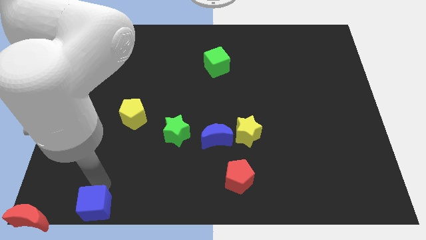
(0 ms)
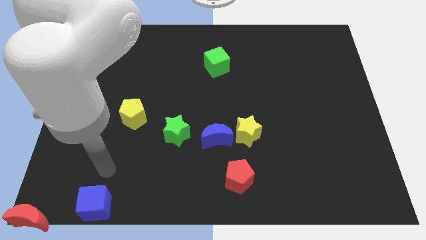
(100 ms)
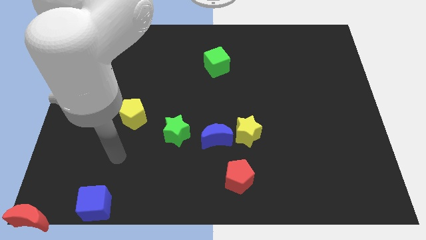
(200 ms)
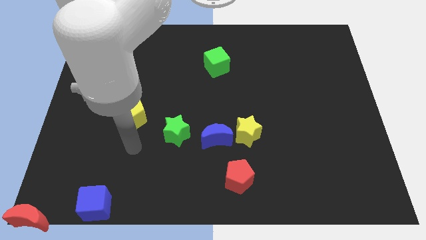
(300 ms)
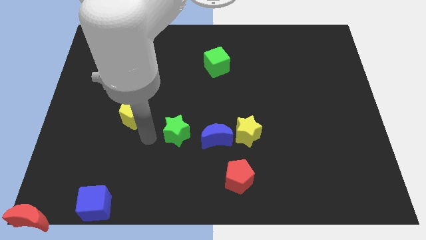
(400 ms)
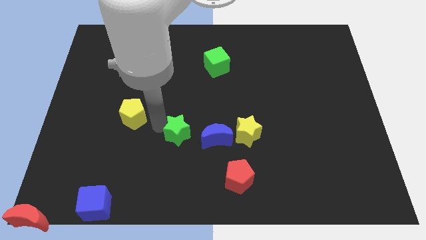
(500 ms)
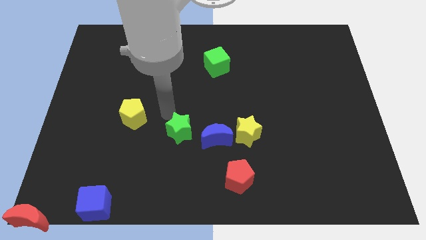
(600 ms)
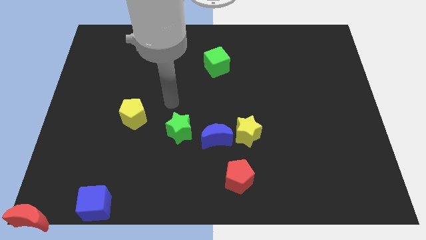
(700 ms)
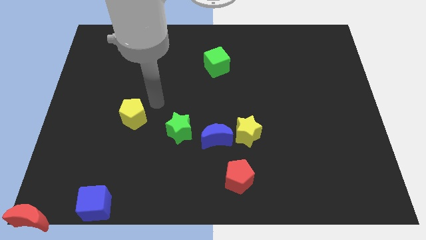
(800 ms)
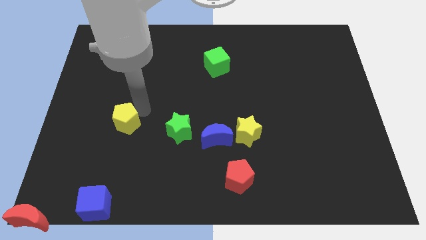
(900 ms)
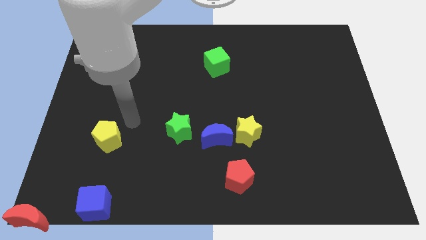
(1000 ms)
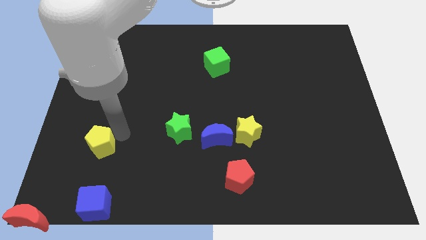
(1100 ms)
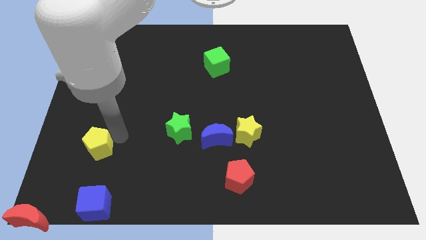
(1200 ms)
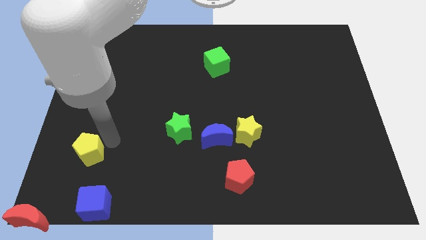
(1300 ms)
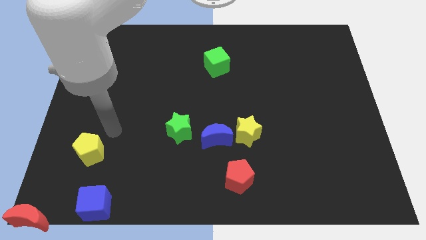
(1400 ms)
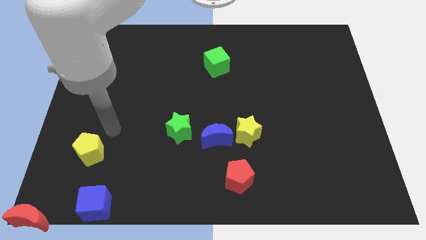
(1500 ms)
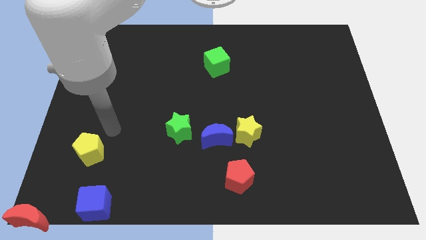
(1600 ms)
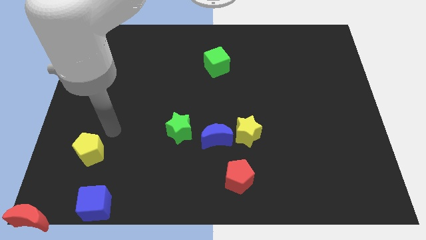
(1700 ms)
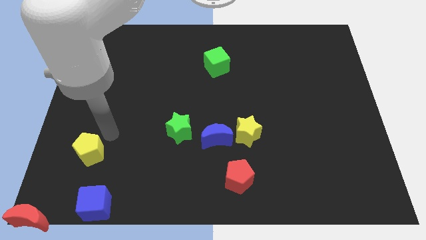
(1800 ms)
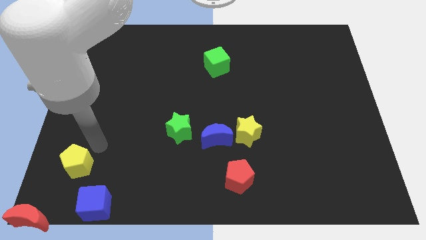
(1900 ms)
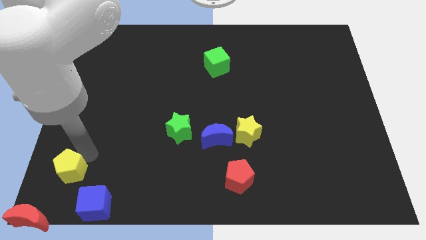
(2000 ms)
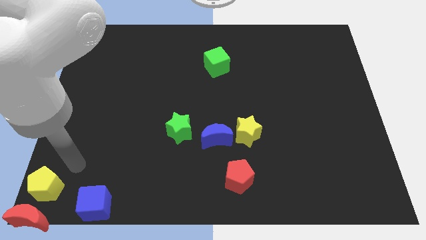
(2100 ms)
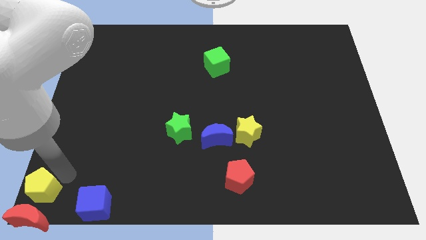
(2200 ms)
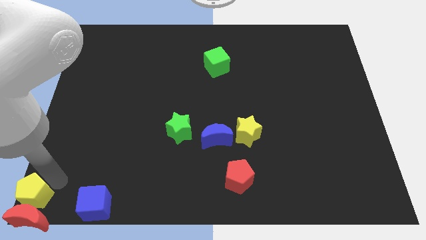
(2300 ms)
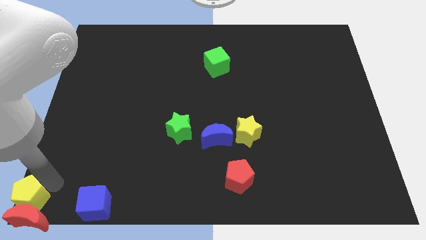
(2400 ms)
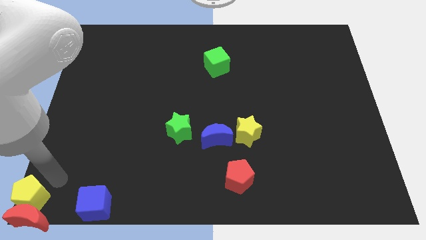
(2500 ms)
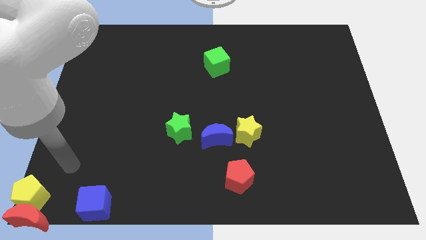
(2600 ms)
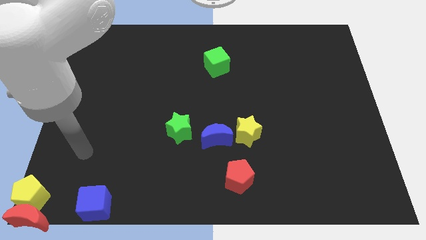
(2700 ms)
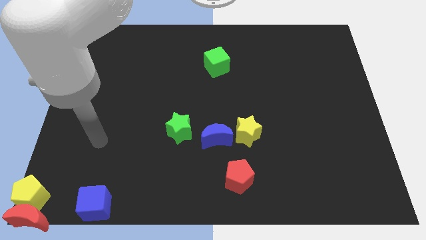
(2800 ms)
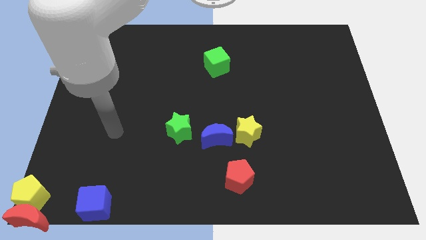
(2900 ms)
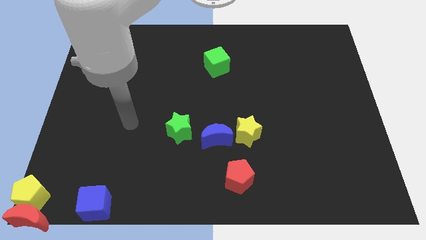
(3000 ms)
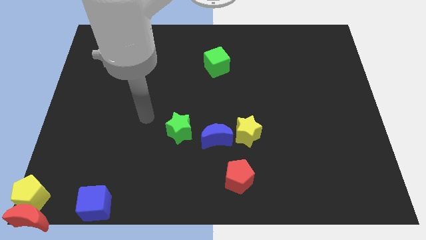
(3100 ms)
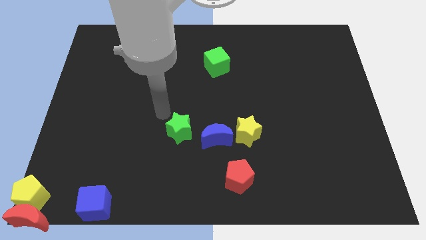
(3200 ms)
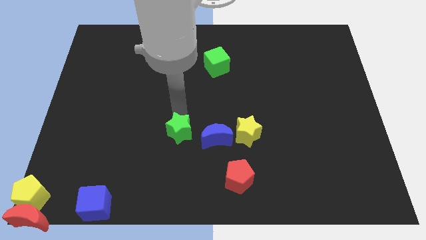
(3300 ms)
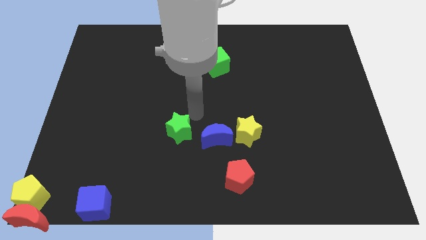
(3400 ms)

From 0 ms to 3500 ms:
push the yellow pentagon to the left bottom corner of the board

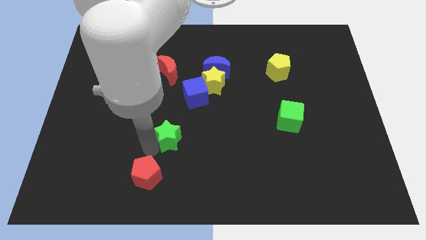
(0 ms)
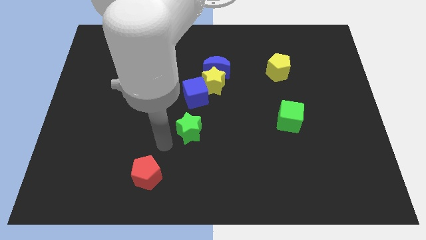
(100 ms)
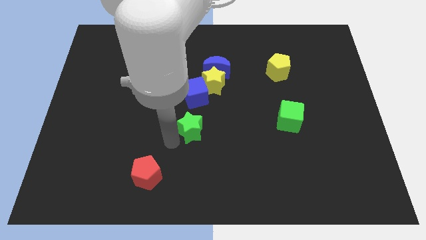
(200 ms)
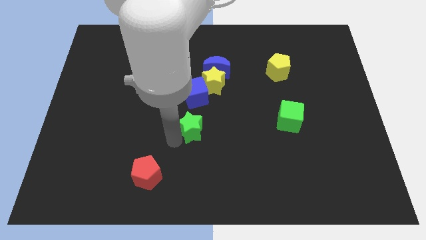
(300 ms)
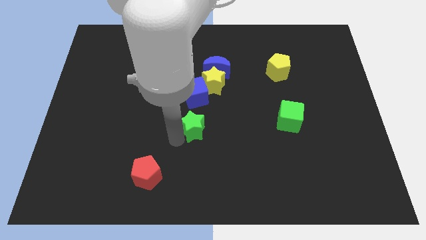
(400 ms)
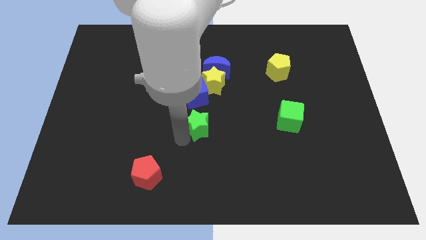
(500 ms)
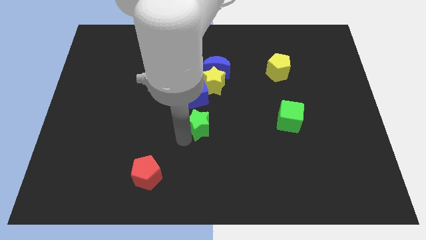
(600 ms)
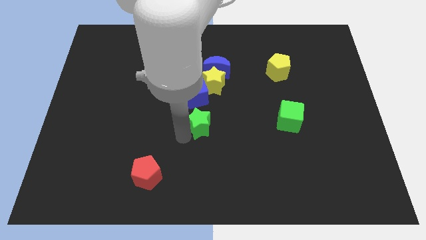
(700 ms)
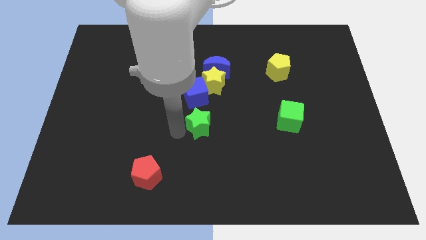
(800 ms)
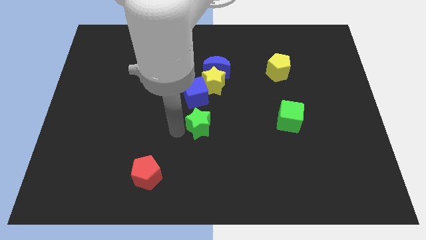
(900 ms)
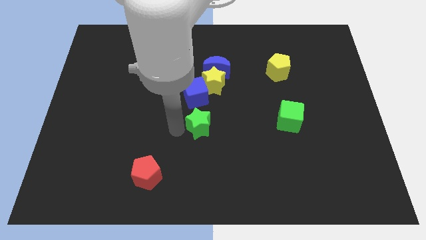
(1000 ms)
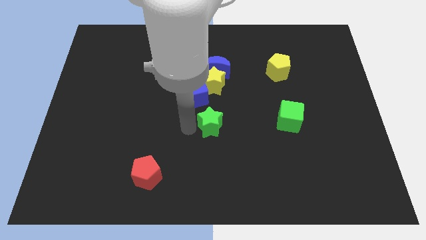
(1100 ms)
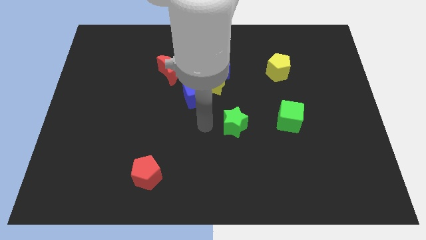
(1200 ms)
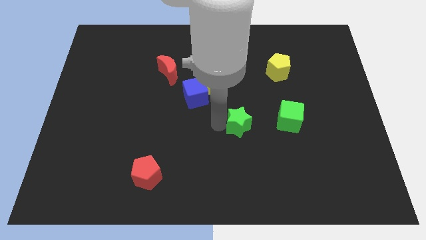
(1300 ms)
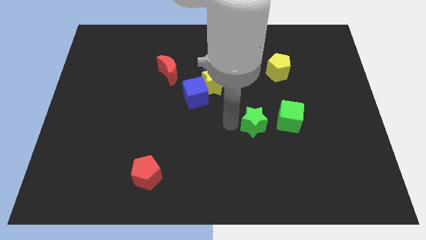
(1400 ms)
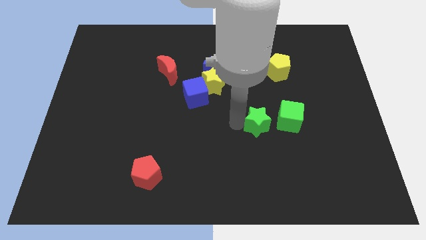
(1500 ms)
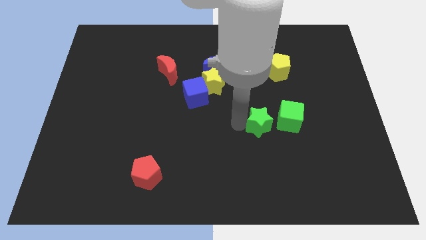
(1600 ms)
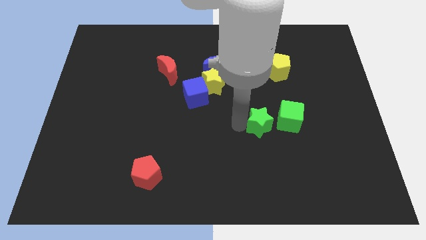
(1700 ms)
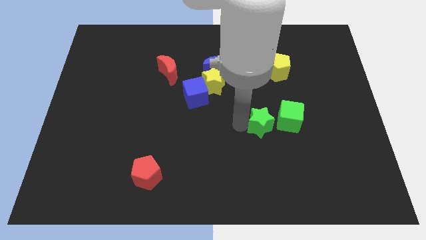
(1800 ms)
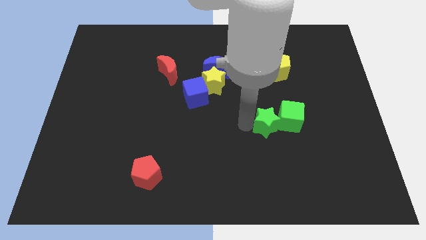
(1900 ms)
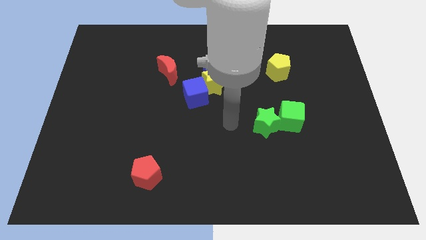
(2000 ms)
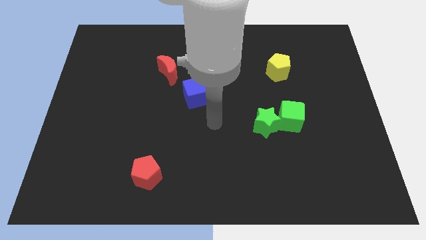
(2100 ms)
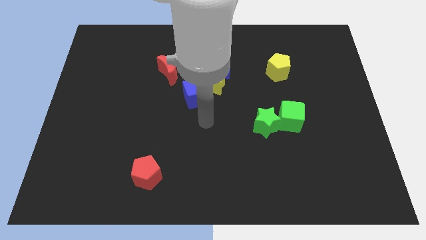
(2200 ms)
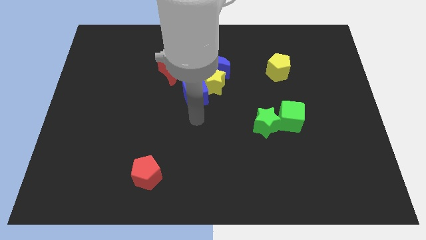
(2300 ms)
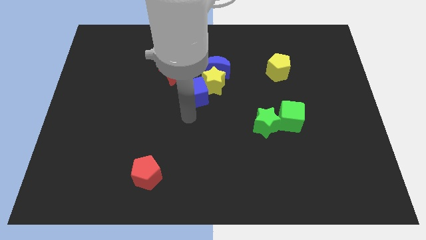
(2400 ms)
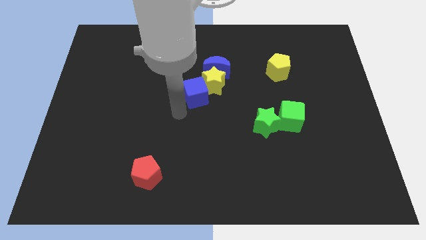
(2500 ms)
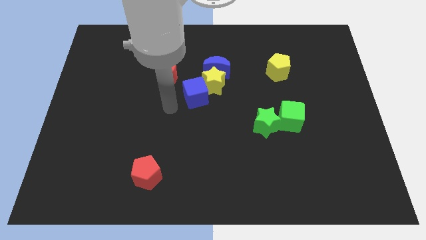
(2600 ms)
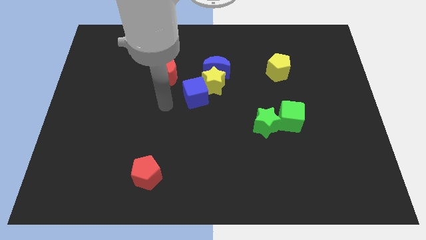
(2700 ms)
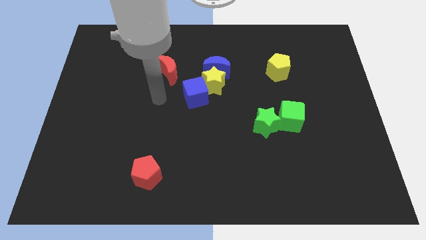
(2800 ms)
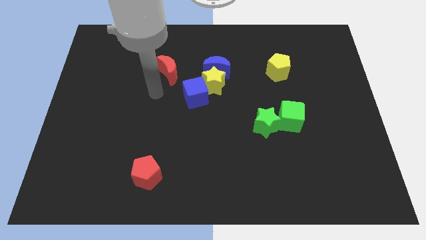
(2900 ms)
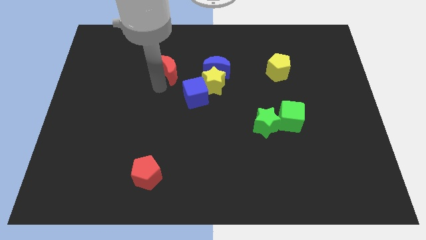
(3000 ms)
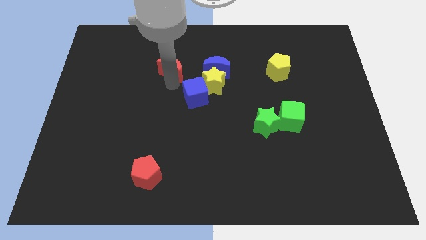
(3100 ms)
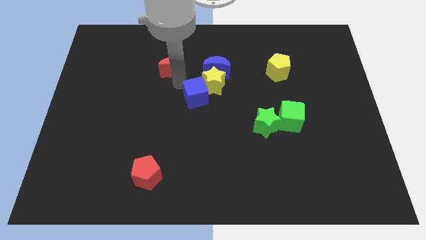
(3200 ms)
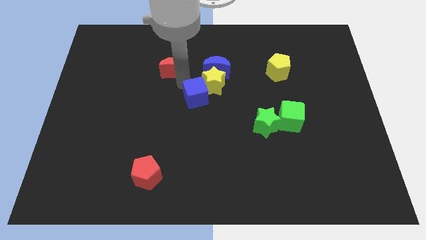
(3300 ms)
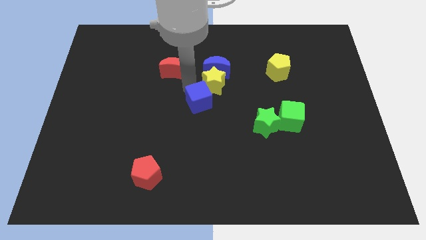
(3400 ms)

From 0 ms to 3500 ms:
move green star into green cube

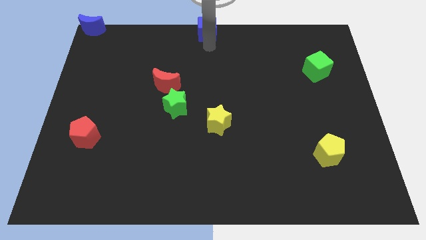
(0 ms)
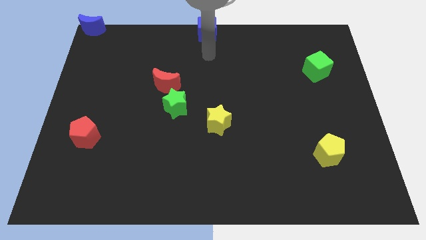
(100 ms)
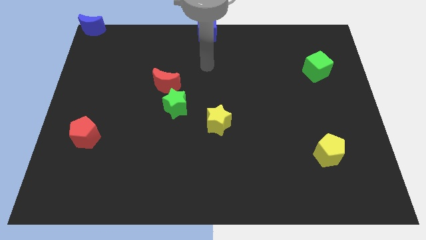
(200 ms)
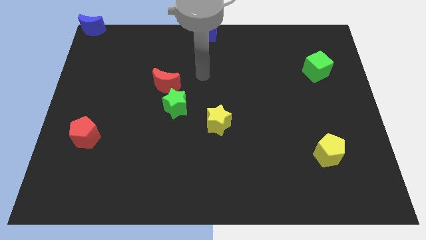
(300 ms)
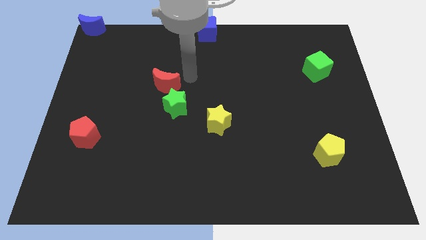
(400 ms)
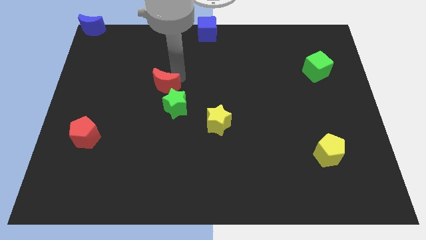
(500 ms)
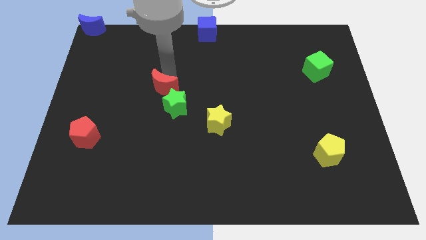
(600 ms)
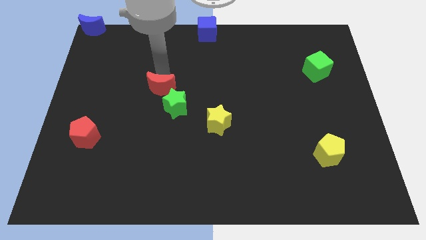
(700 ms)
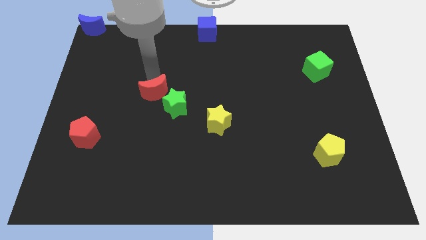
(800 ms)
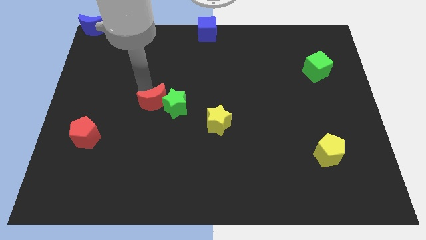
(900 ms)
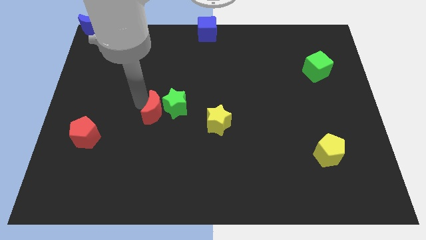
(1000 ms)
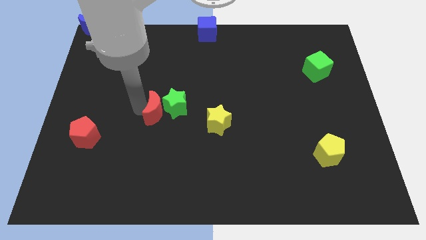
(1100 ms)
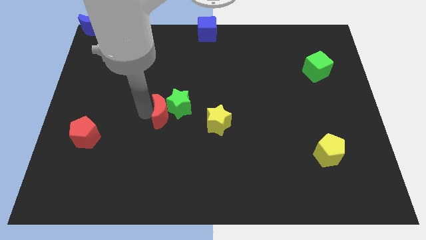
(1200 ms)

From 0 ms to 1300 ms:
move the red moon to the left of the green star

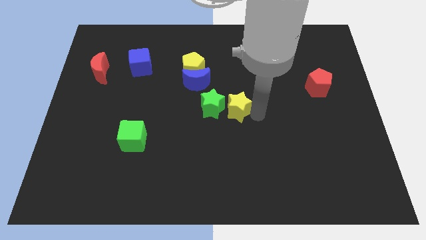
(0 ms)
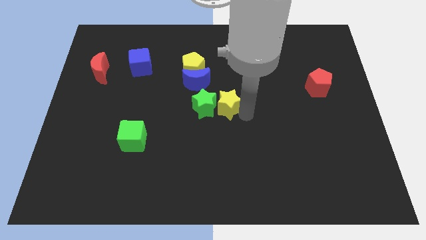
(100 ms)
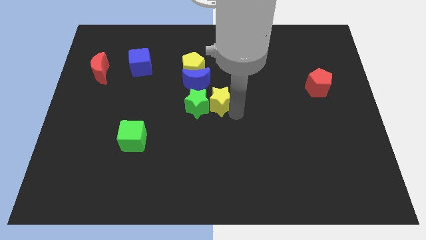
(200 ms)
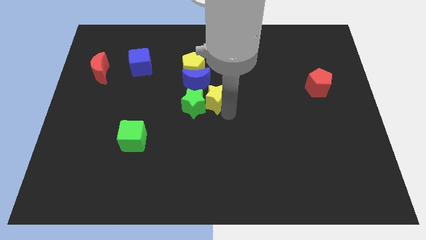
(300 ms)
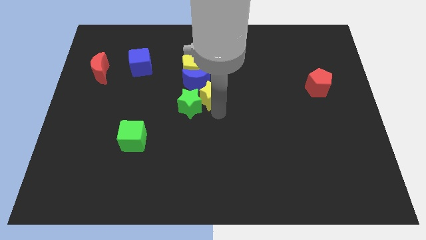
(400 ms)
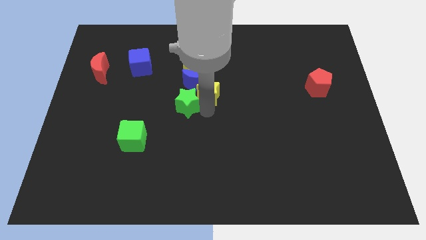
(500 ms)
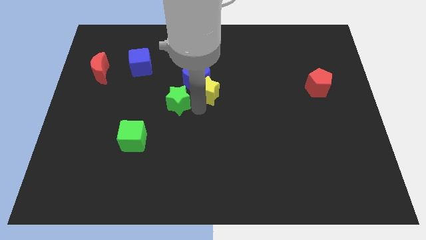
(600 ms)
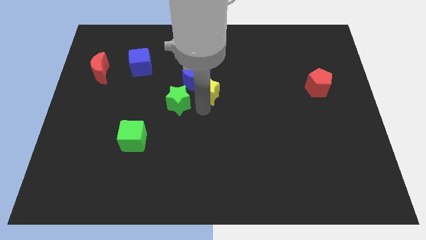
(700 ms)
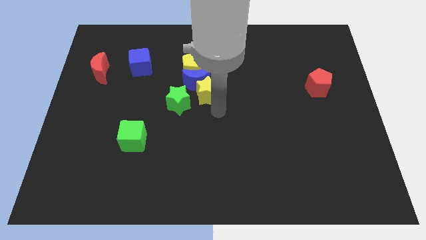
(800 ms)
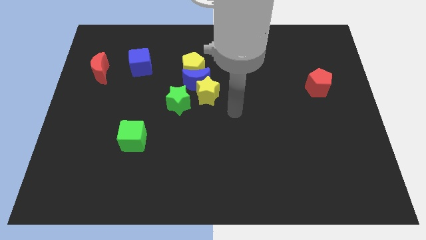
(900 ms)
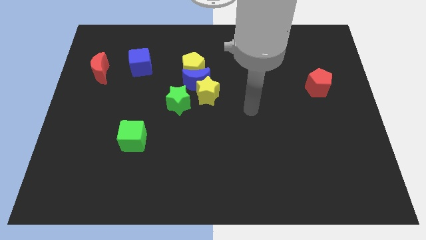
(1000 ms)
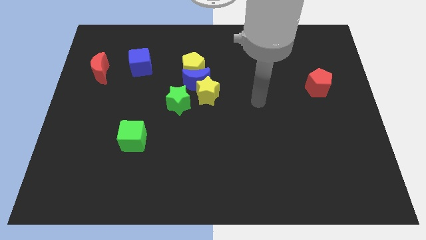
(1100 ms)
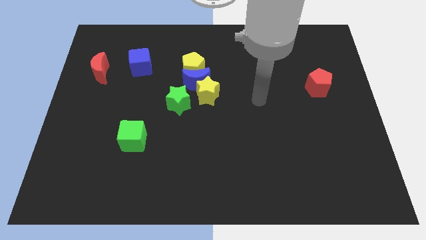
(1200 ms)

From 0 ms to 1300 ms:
place the yellow star down to the blue moon
